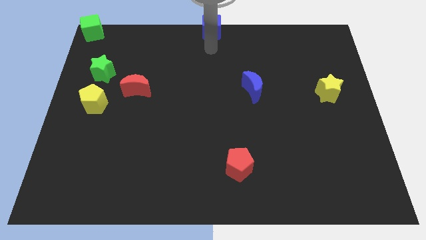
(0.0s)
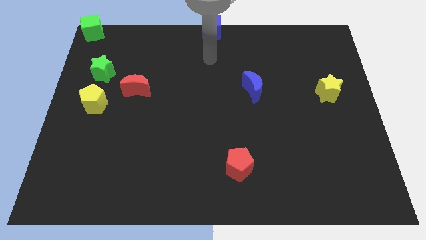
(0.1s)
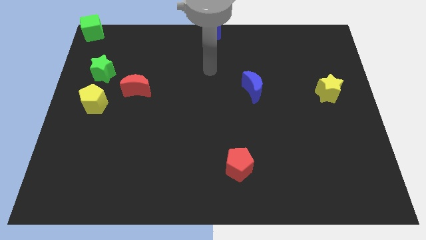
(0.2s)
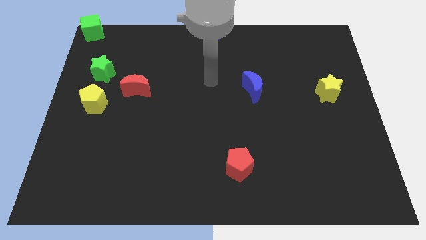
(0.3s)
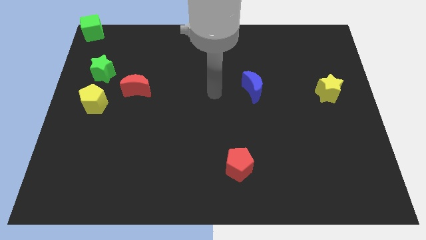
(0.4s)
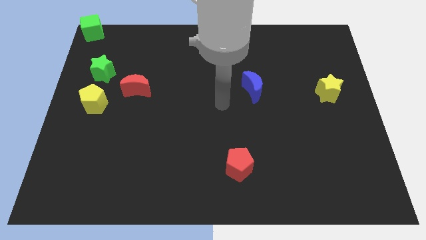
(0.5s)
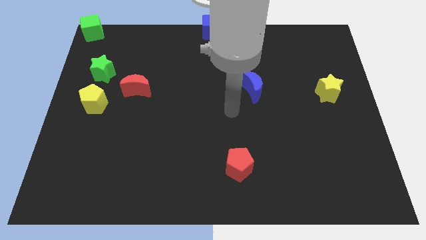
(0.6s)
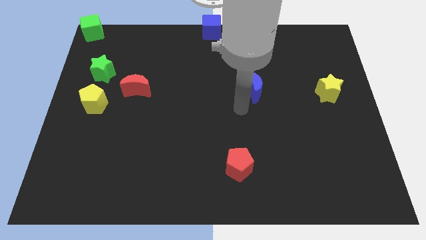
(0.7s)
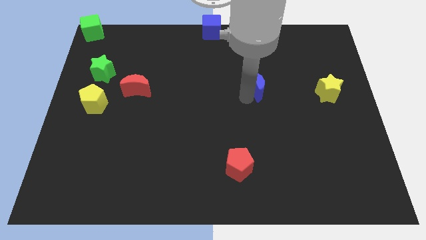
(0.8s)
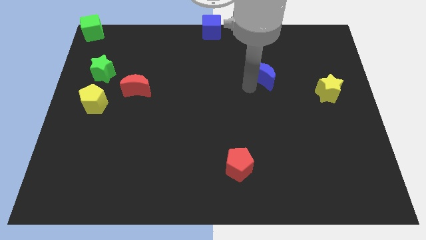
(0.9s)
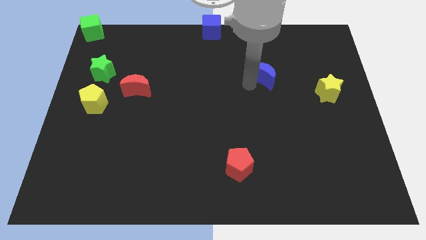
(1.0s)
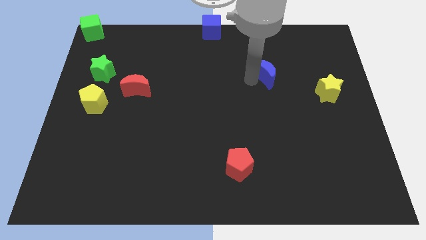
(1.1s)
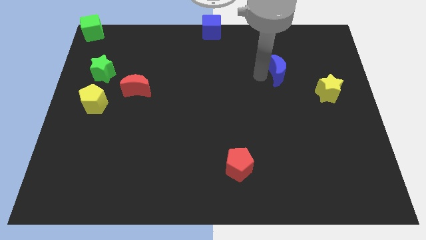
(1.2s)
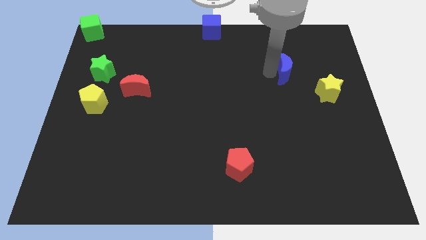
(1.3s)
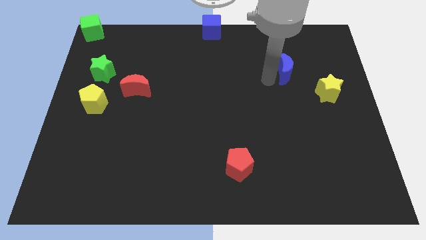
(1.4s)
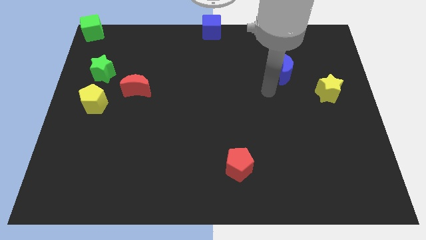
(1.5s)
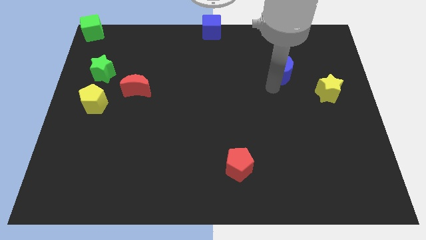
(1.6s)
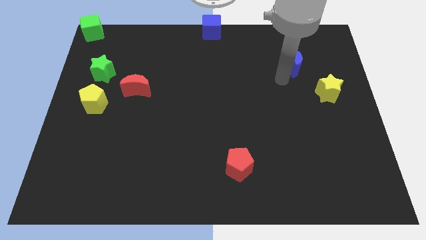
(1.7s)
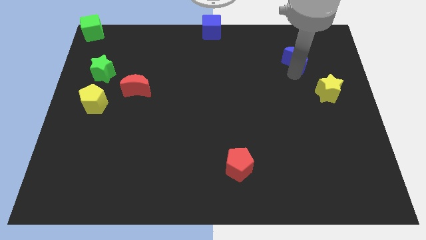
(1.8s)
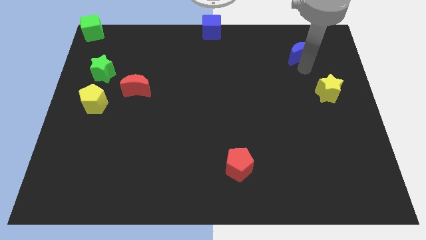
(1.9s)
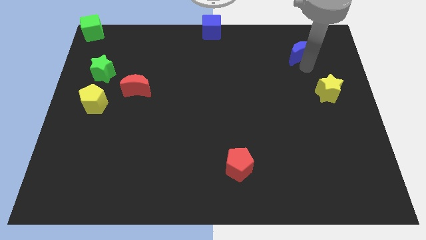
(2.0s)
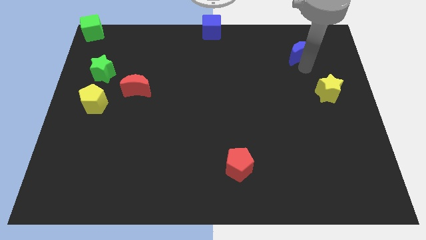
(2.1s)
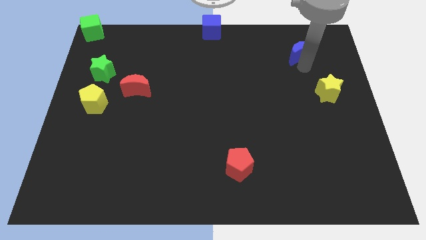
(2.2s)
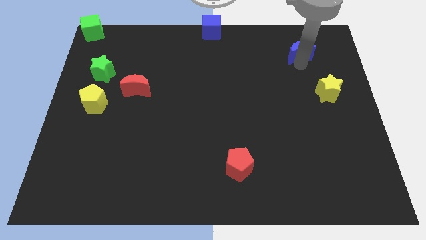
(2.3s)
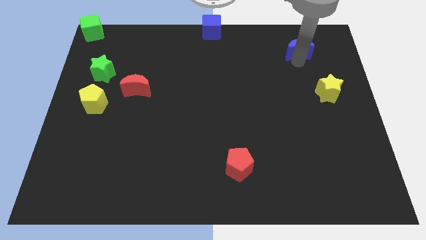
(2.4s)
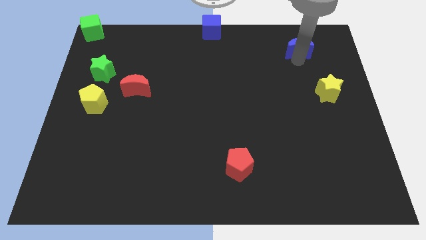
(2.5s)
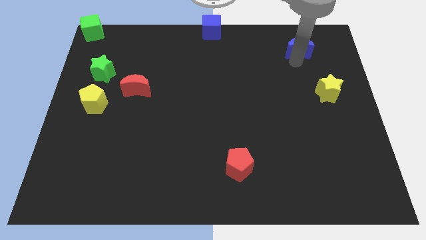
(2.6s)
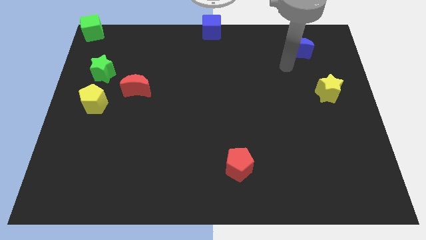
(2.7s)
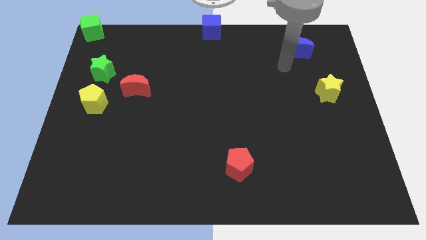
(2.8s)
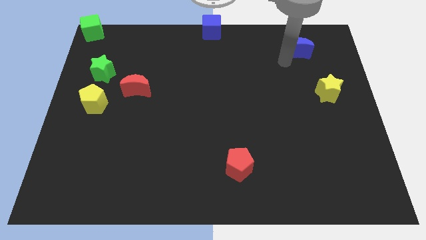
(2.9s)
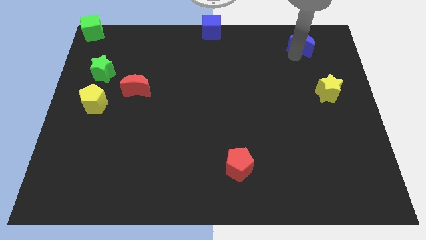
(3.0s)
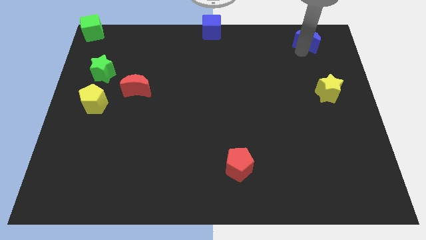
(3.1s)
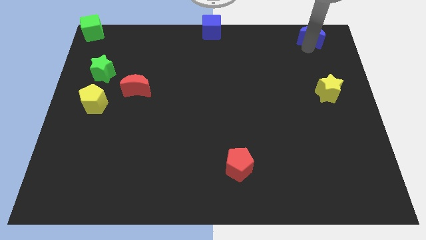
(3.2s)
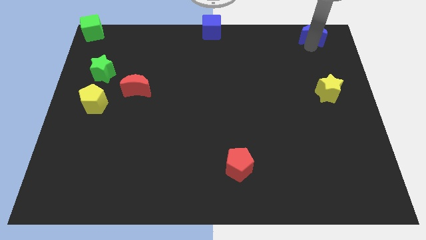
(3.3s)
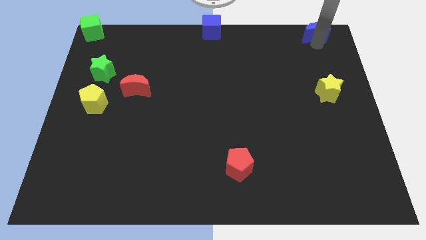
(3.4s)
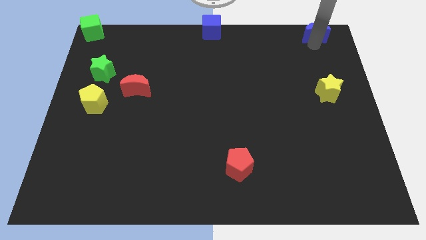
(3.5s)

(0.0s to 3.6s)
place the blue crescent vertically above the yellow star

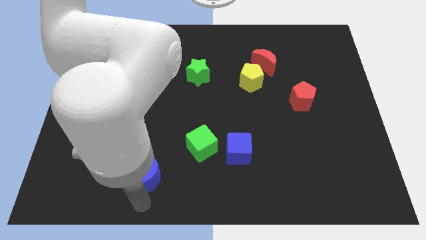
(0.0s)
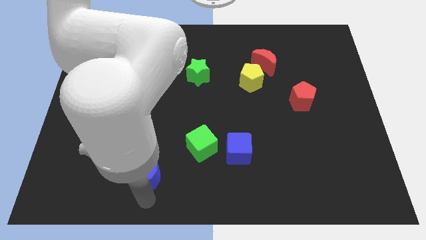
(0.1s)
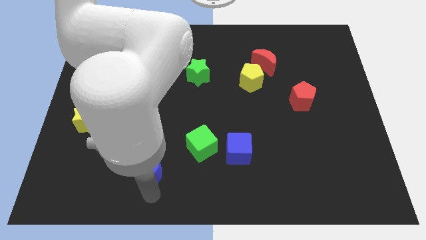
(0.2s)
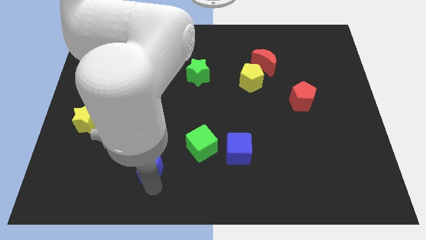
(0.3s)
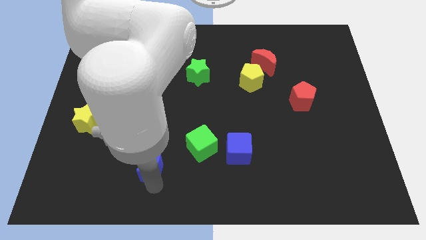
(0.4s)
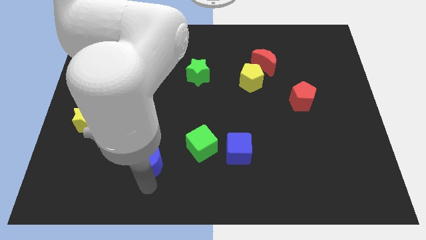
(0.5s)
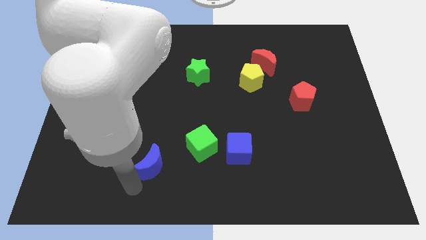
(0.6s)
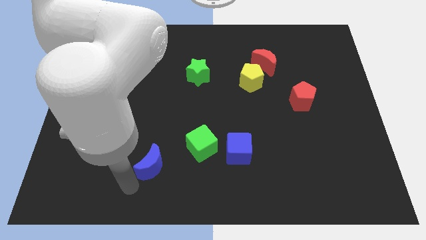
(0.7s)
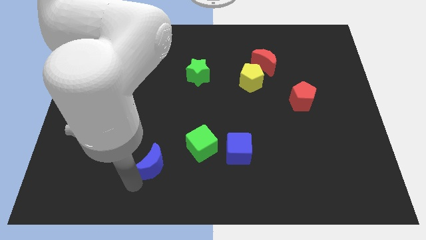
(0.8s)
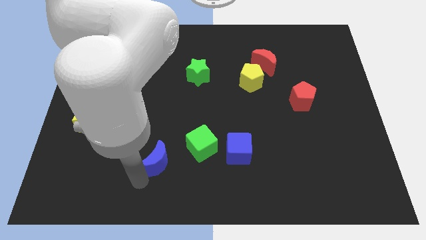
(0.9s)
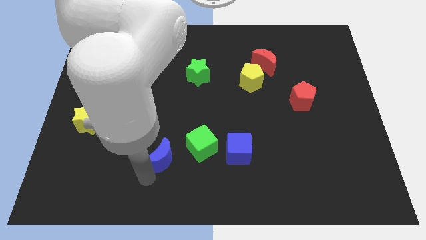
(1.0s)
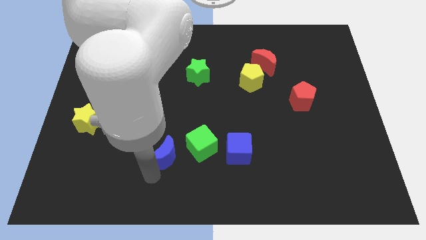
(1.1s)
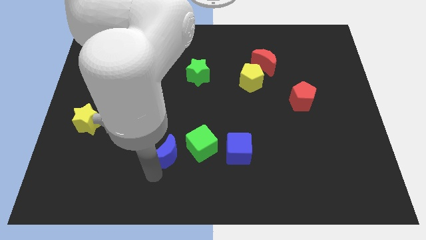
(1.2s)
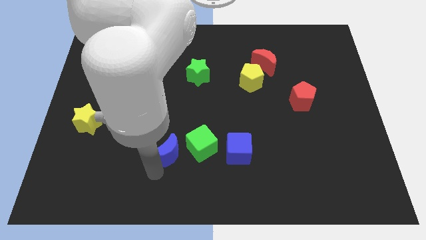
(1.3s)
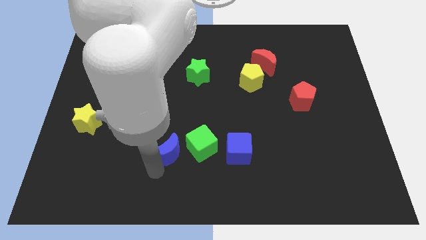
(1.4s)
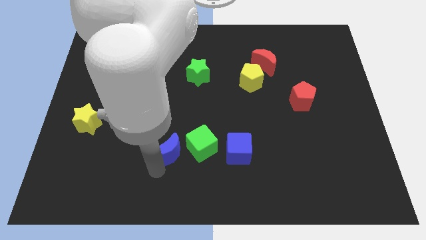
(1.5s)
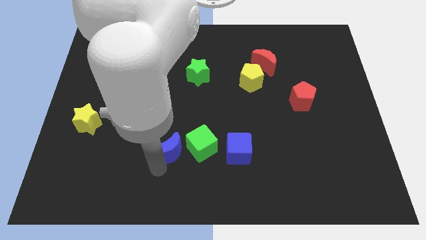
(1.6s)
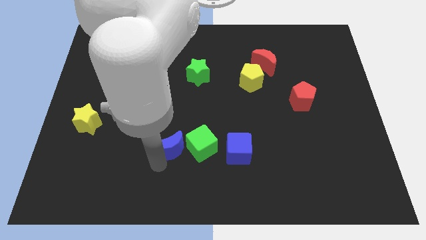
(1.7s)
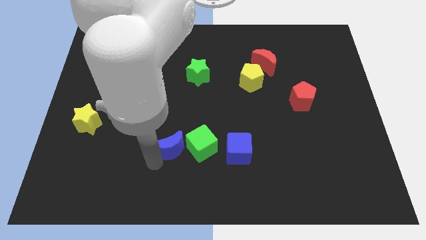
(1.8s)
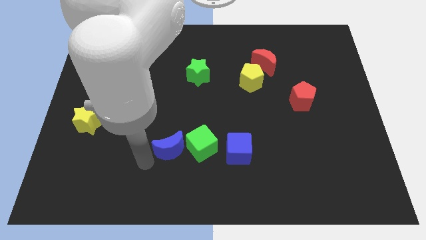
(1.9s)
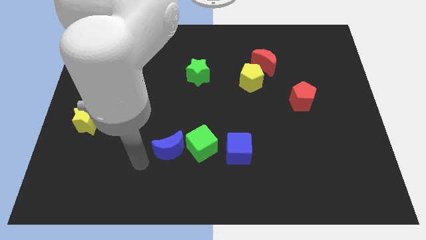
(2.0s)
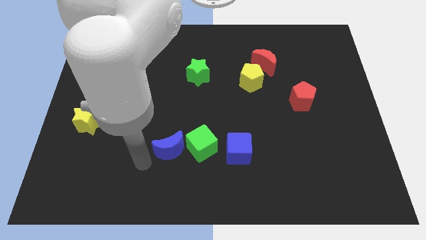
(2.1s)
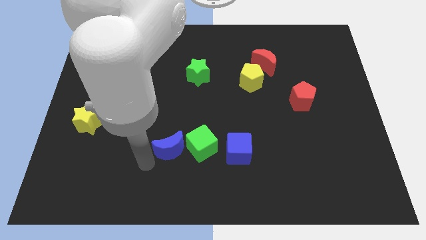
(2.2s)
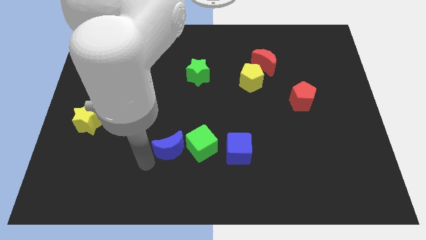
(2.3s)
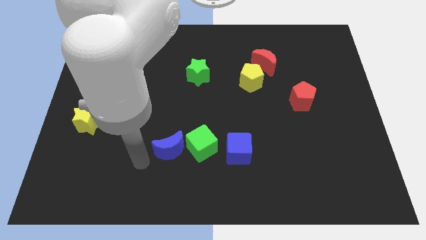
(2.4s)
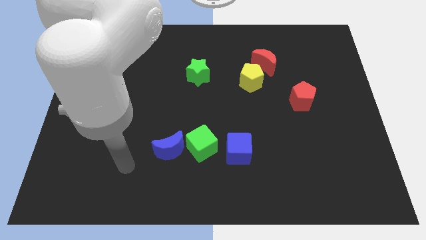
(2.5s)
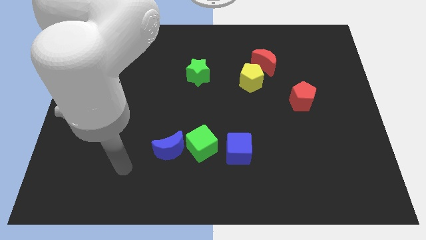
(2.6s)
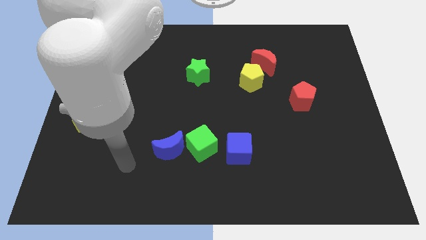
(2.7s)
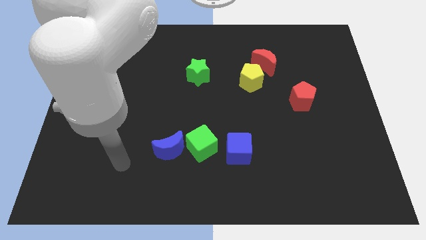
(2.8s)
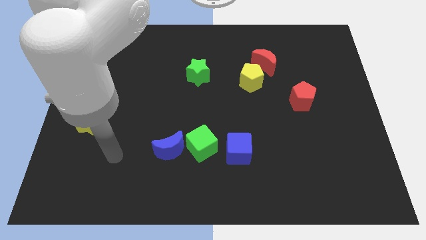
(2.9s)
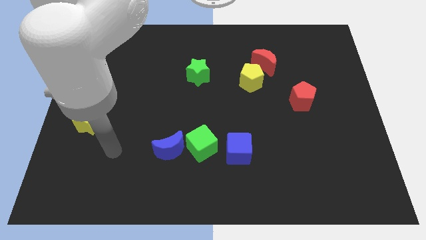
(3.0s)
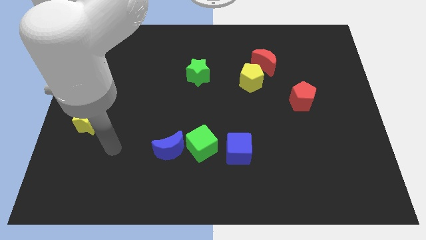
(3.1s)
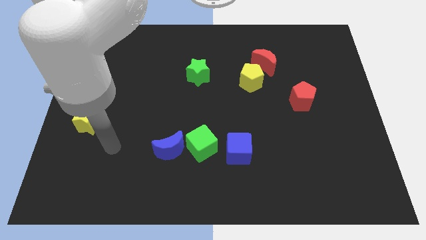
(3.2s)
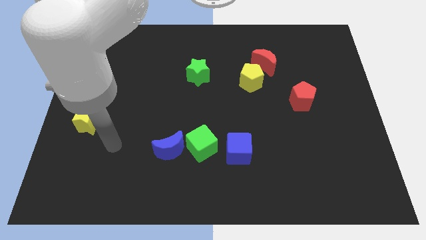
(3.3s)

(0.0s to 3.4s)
put the blue crescent parallel left to the green cube

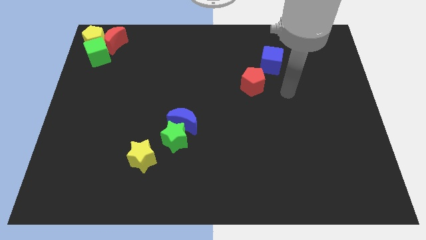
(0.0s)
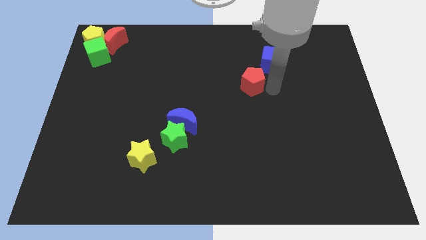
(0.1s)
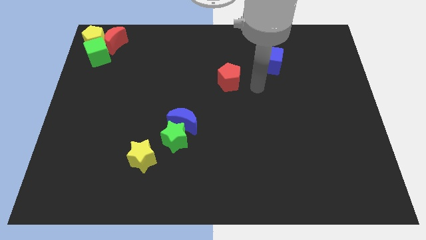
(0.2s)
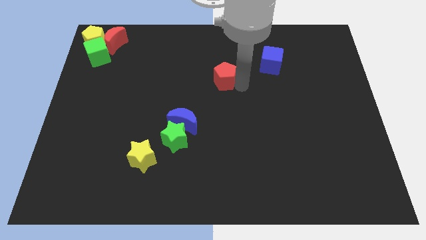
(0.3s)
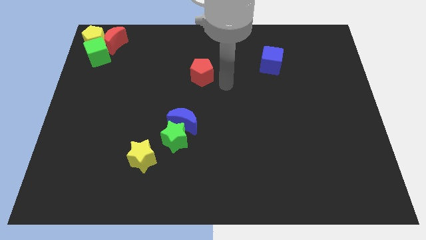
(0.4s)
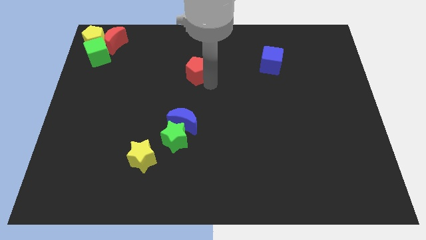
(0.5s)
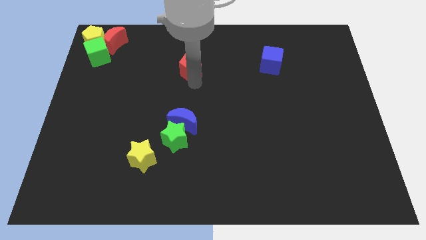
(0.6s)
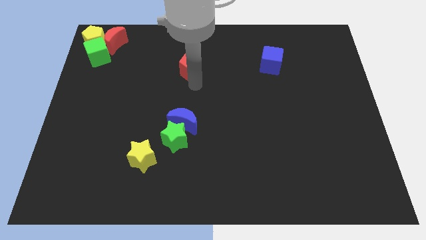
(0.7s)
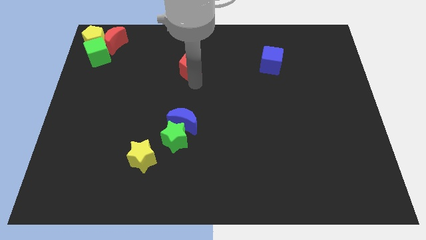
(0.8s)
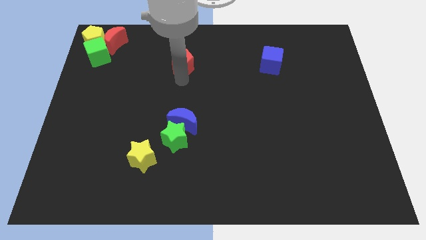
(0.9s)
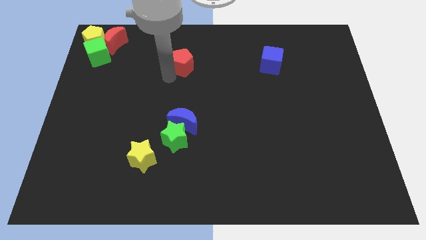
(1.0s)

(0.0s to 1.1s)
place the red moon above the blue moon

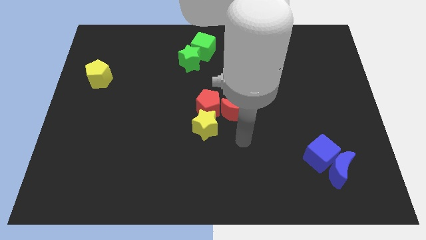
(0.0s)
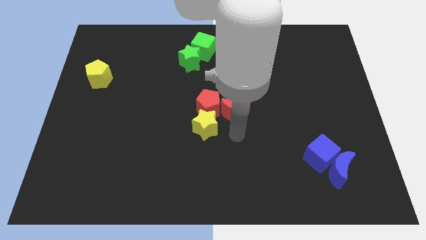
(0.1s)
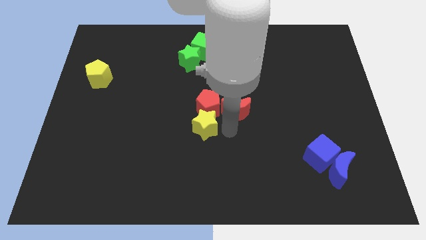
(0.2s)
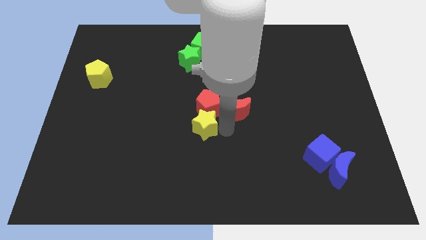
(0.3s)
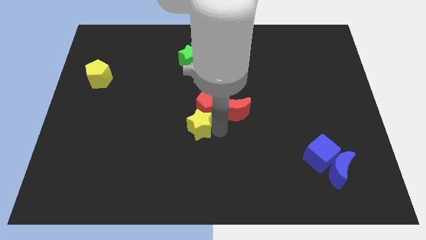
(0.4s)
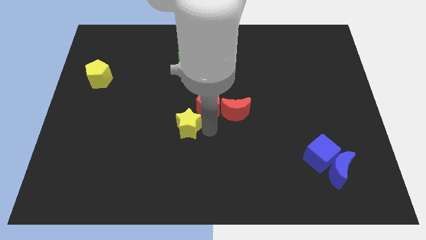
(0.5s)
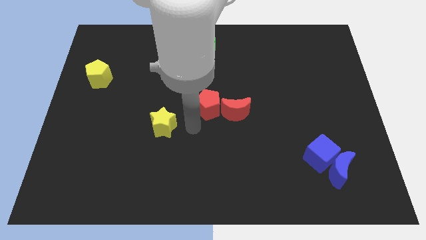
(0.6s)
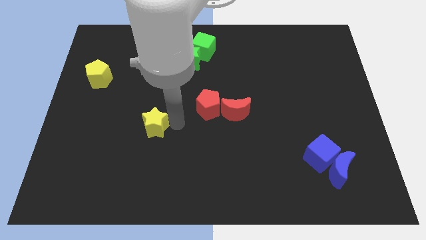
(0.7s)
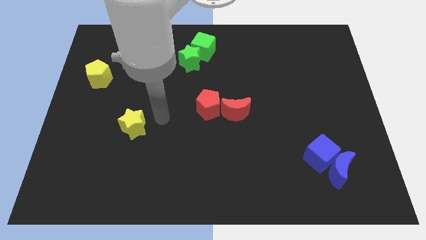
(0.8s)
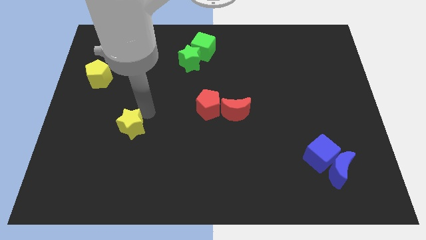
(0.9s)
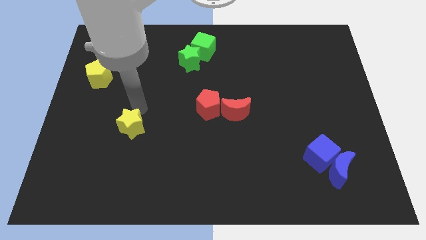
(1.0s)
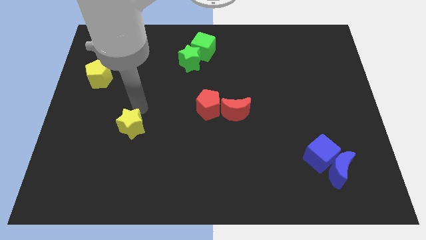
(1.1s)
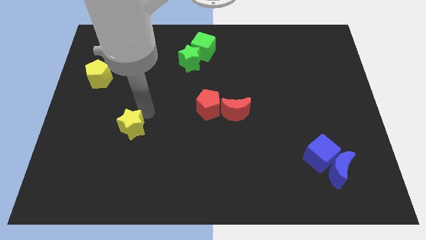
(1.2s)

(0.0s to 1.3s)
separate the yellow star from red pentagon
